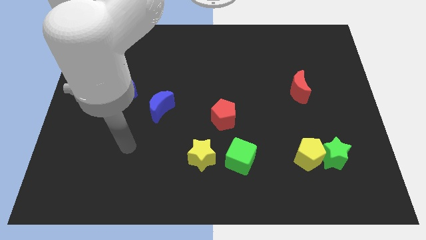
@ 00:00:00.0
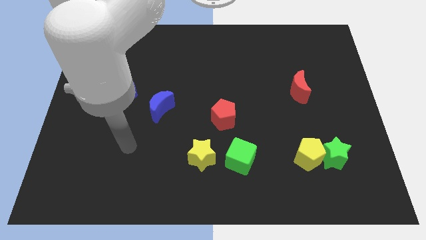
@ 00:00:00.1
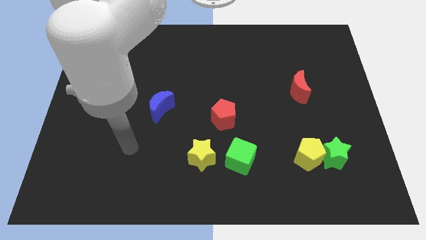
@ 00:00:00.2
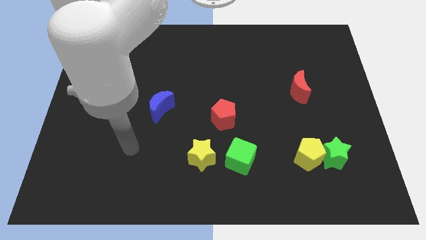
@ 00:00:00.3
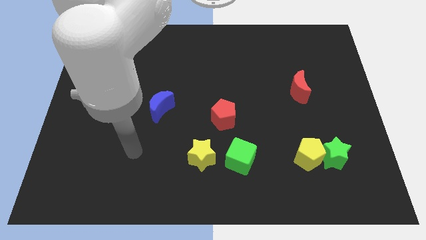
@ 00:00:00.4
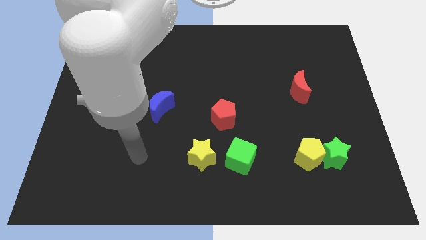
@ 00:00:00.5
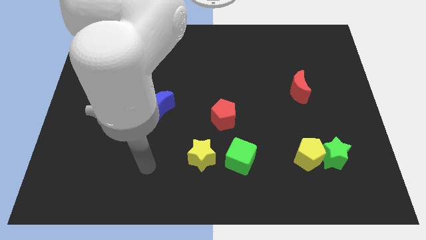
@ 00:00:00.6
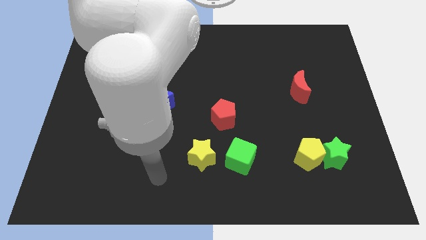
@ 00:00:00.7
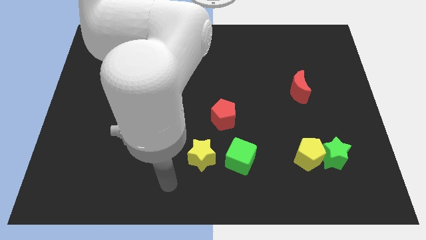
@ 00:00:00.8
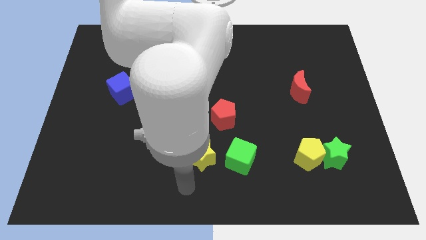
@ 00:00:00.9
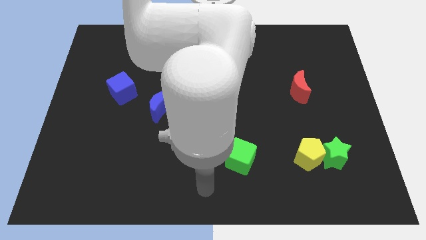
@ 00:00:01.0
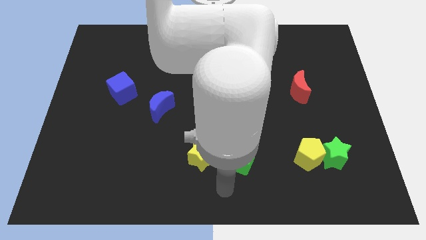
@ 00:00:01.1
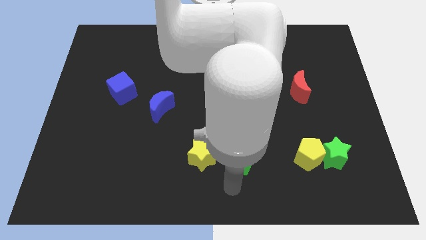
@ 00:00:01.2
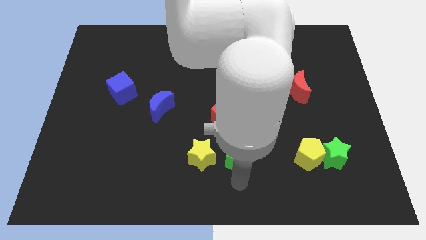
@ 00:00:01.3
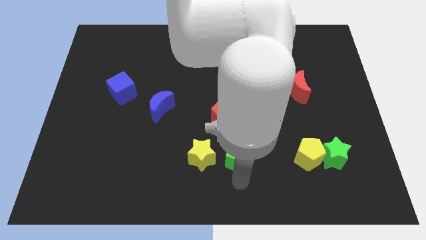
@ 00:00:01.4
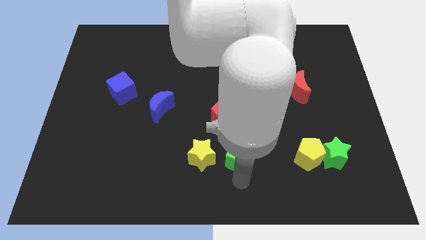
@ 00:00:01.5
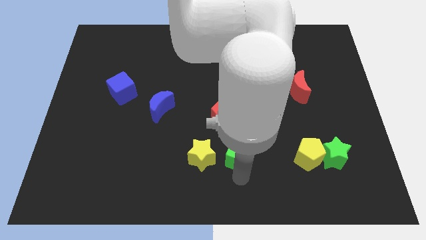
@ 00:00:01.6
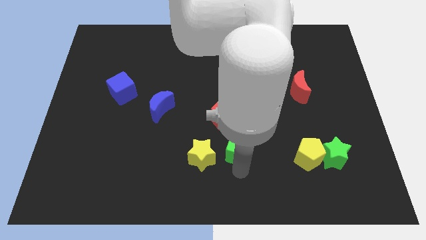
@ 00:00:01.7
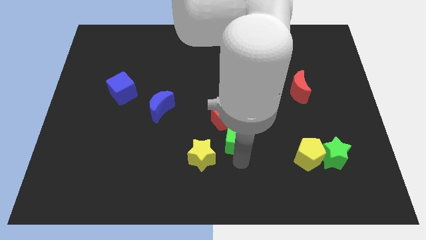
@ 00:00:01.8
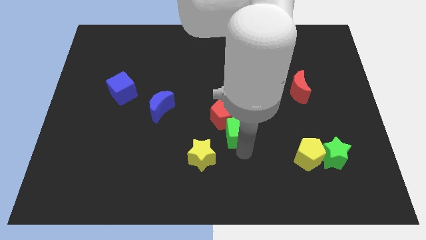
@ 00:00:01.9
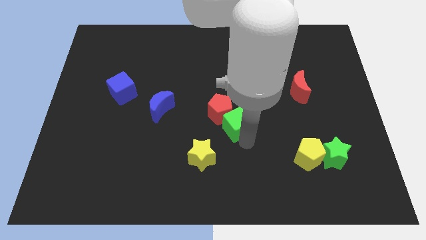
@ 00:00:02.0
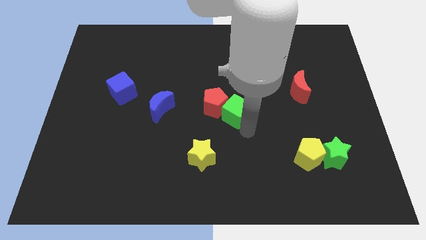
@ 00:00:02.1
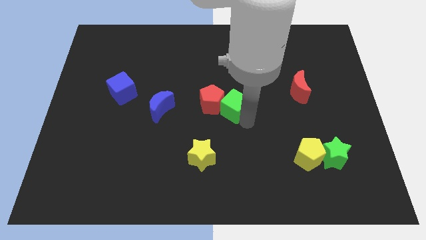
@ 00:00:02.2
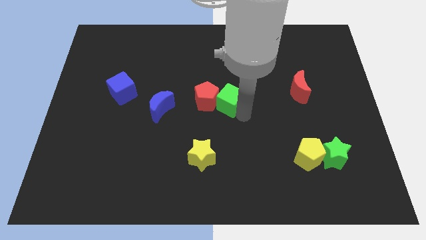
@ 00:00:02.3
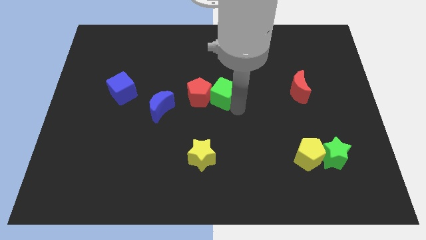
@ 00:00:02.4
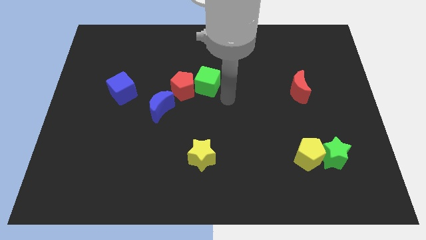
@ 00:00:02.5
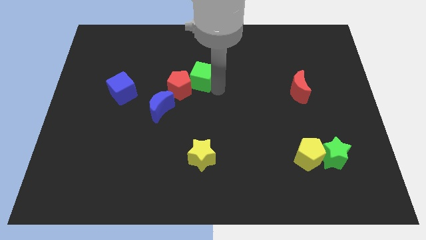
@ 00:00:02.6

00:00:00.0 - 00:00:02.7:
move green cube into the red pentagon

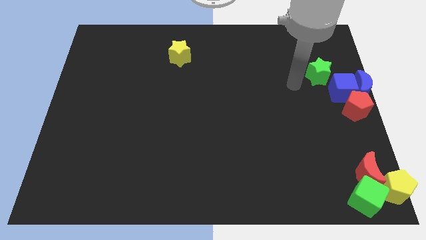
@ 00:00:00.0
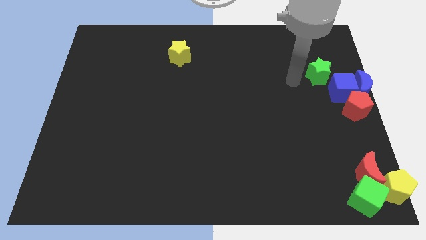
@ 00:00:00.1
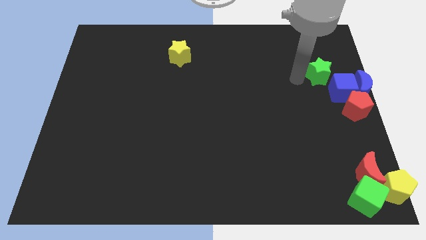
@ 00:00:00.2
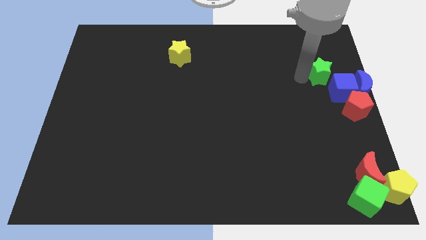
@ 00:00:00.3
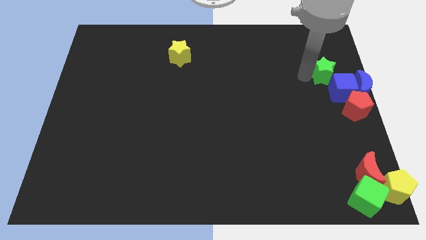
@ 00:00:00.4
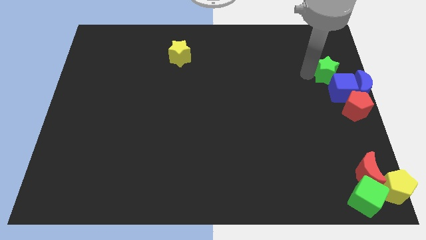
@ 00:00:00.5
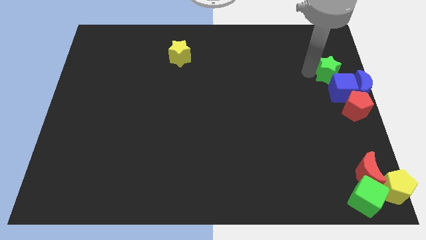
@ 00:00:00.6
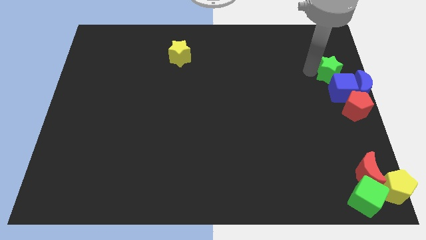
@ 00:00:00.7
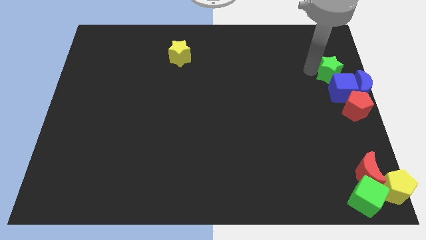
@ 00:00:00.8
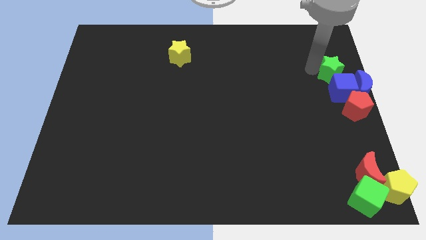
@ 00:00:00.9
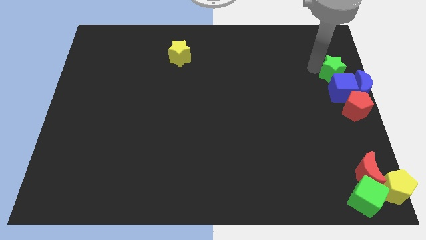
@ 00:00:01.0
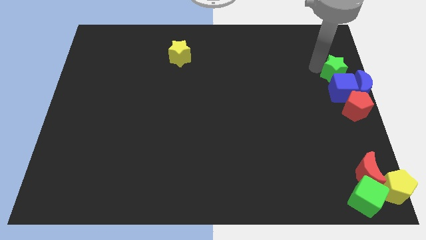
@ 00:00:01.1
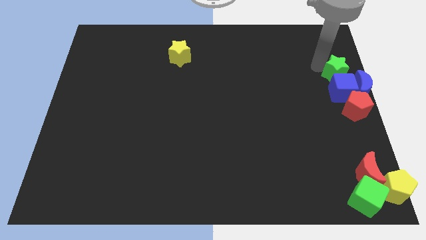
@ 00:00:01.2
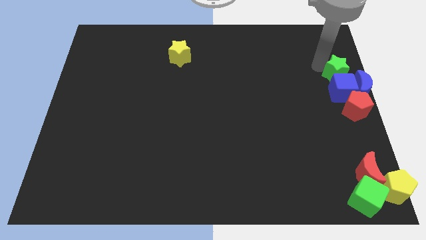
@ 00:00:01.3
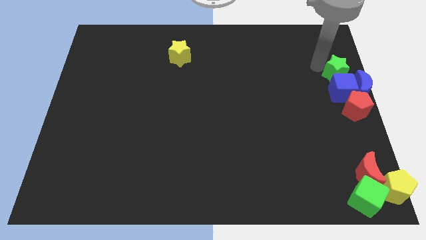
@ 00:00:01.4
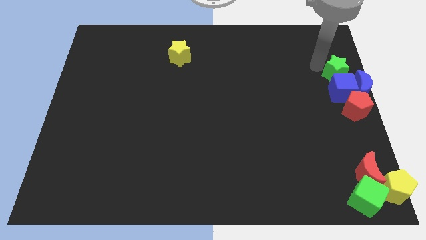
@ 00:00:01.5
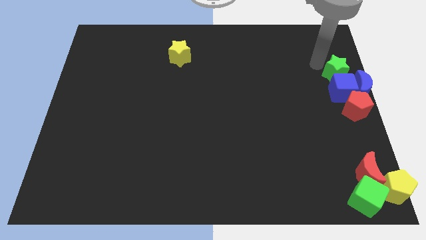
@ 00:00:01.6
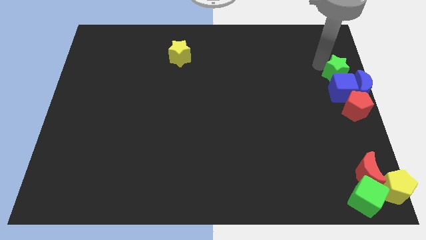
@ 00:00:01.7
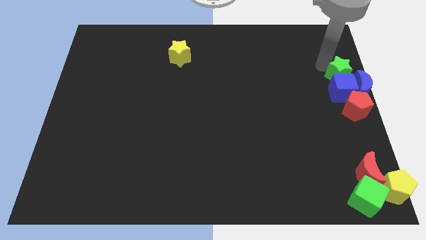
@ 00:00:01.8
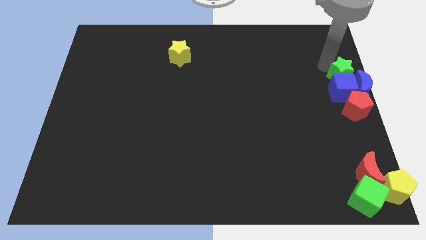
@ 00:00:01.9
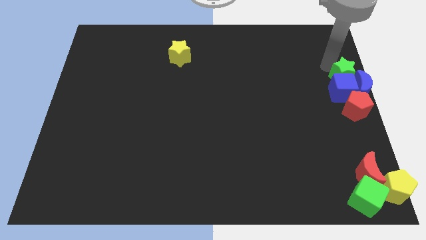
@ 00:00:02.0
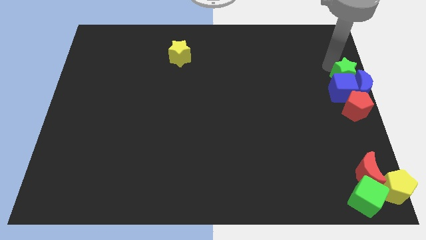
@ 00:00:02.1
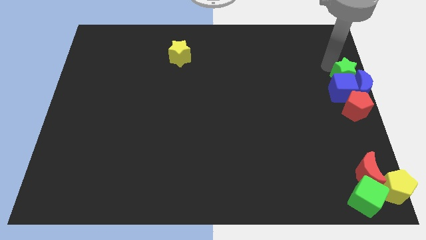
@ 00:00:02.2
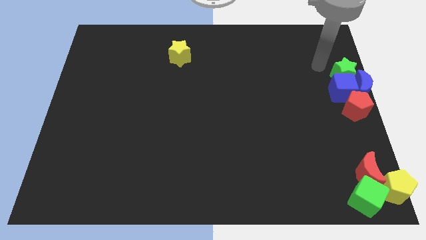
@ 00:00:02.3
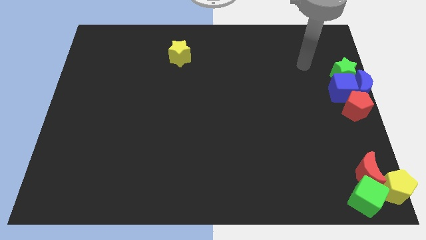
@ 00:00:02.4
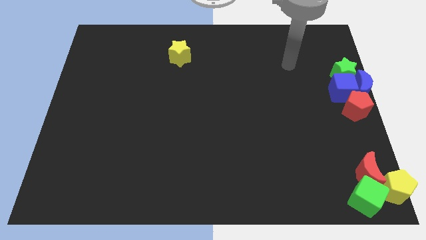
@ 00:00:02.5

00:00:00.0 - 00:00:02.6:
move the green star above the blue cube and blue crescent

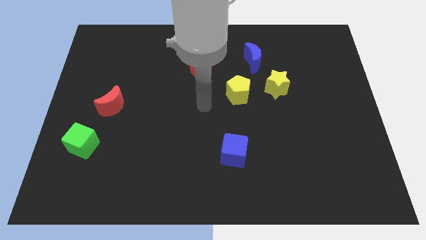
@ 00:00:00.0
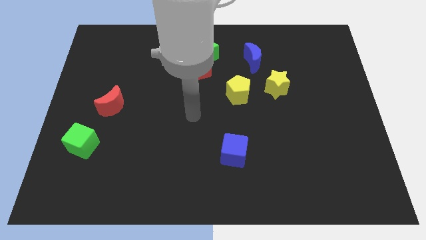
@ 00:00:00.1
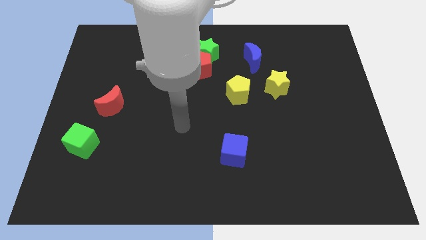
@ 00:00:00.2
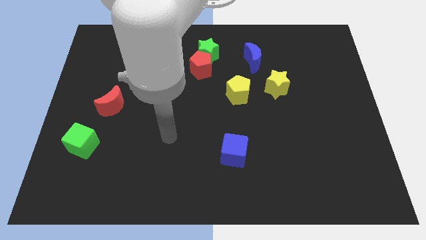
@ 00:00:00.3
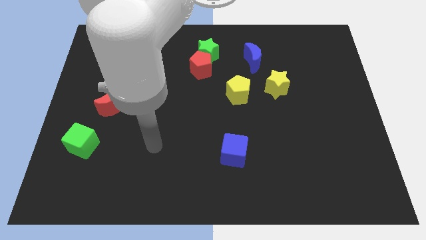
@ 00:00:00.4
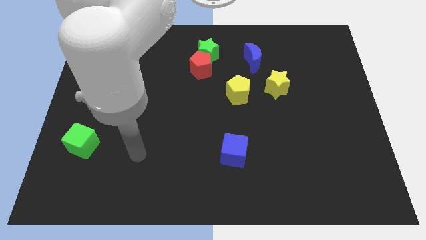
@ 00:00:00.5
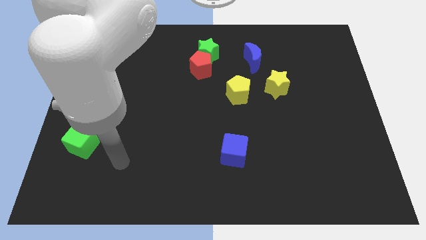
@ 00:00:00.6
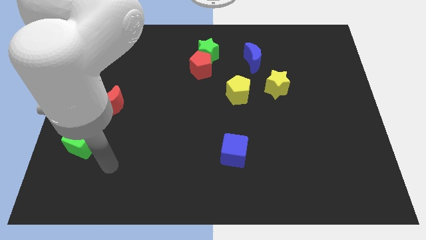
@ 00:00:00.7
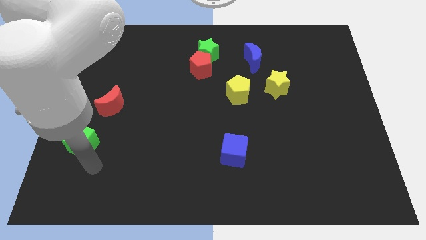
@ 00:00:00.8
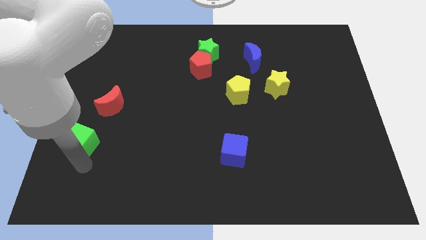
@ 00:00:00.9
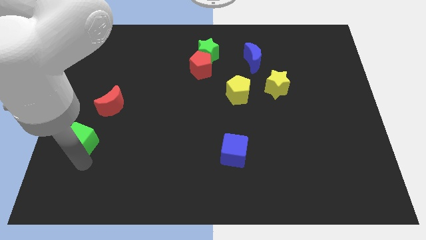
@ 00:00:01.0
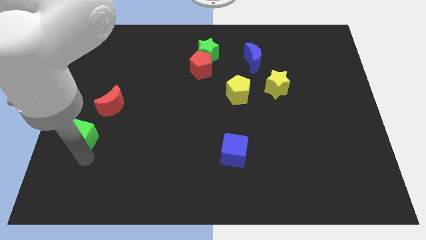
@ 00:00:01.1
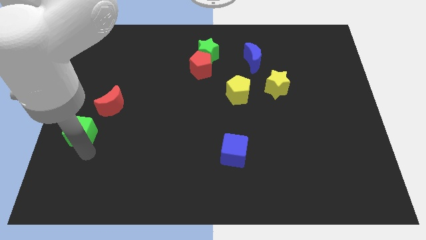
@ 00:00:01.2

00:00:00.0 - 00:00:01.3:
touch the bottom of green cube

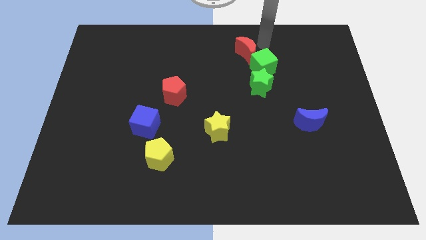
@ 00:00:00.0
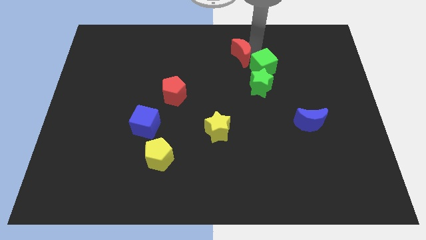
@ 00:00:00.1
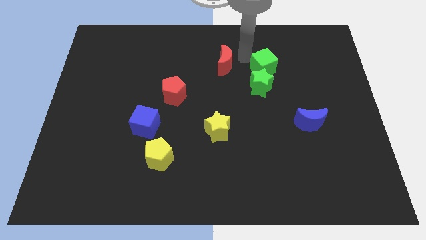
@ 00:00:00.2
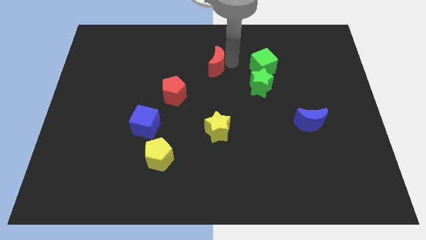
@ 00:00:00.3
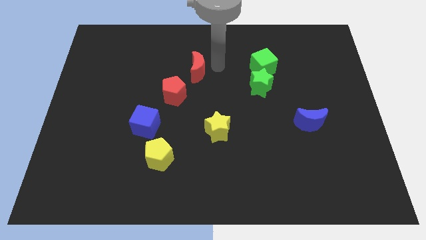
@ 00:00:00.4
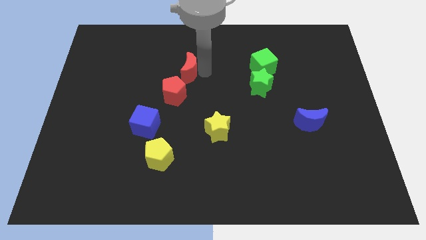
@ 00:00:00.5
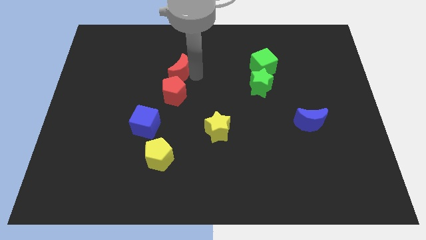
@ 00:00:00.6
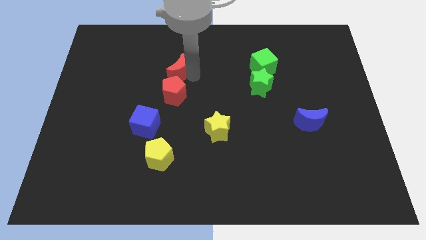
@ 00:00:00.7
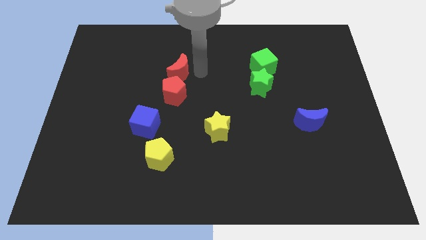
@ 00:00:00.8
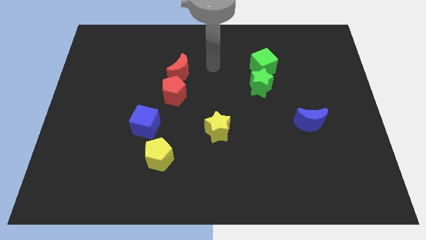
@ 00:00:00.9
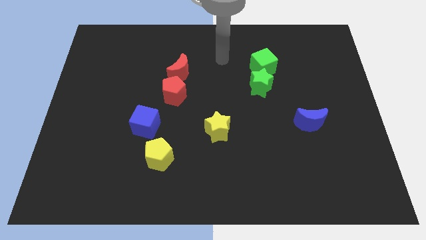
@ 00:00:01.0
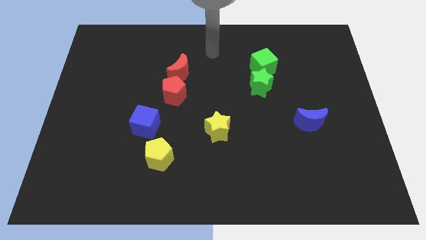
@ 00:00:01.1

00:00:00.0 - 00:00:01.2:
push the red crescent to the top of red pentagon

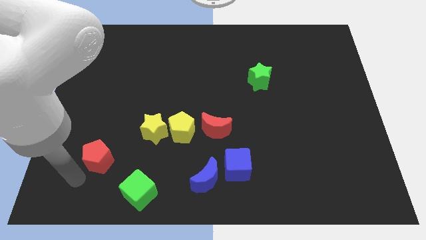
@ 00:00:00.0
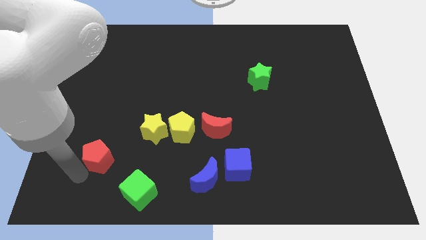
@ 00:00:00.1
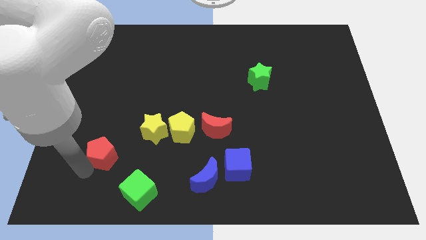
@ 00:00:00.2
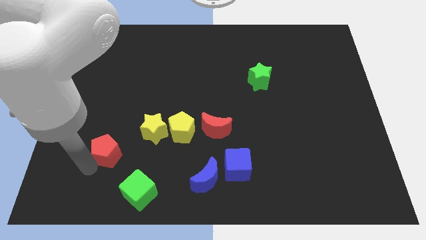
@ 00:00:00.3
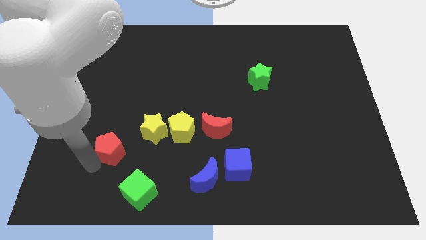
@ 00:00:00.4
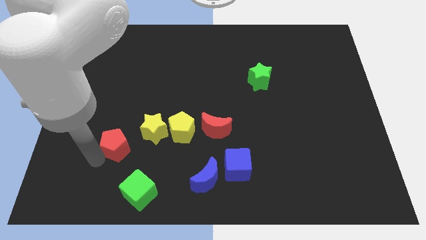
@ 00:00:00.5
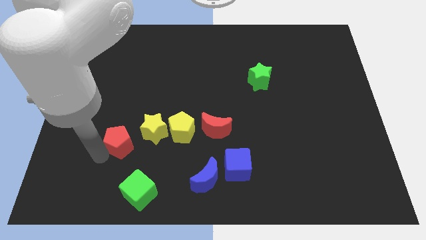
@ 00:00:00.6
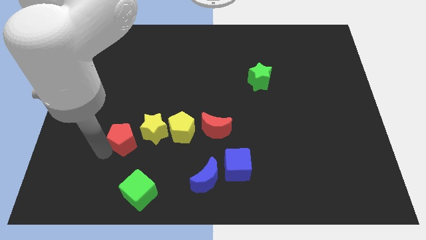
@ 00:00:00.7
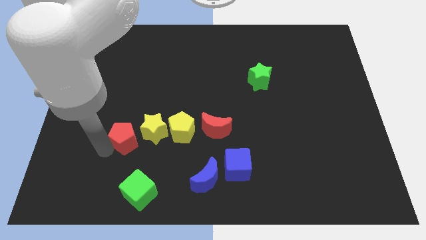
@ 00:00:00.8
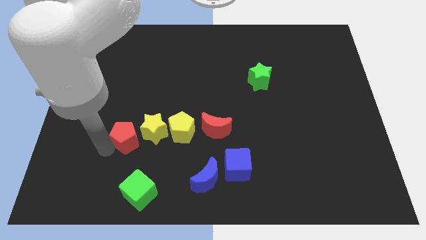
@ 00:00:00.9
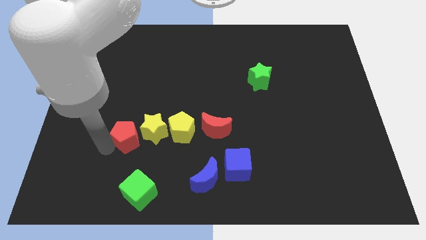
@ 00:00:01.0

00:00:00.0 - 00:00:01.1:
move red pentagon into yellow star
